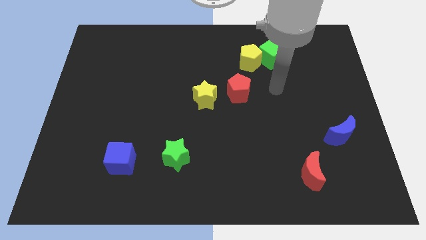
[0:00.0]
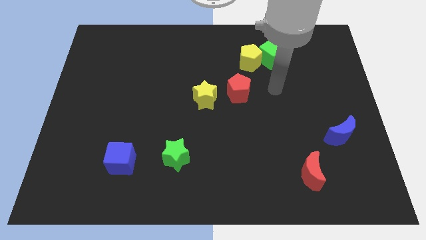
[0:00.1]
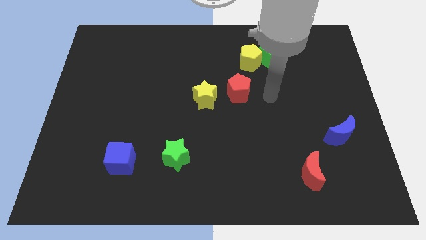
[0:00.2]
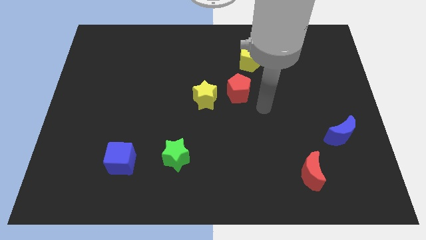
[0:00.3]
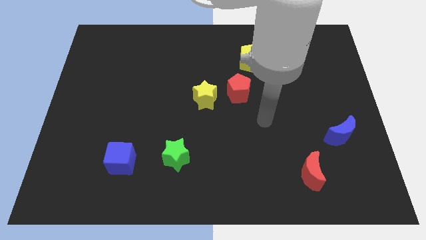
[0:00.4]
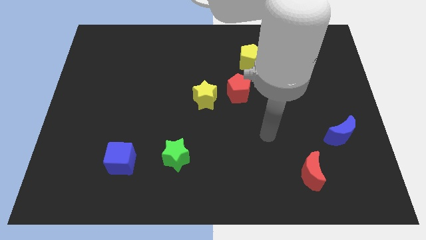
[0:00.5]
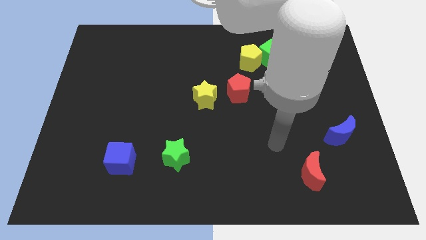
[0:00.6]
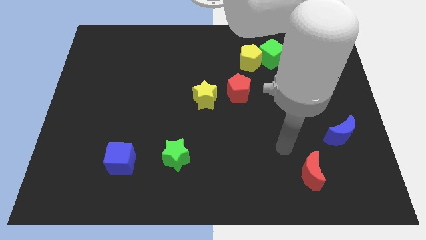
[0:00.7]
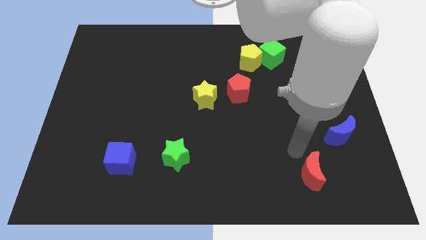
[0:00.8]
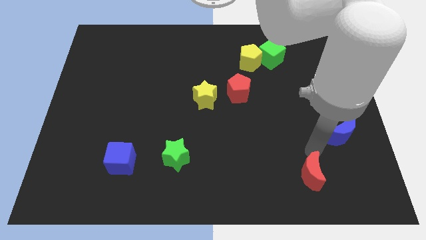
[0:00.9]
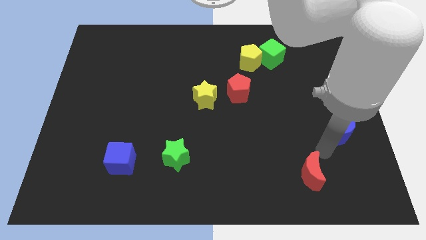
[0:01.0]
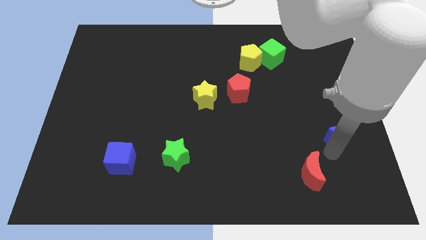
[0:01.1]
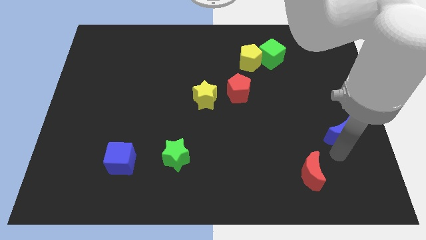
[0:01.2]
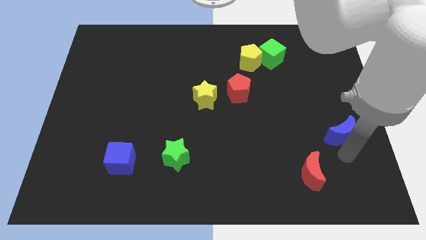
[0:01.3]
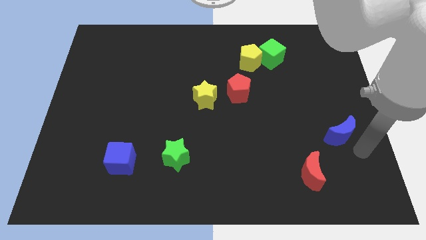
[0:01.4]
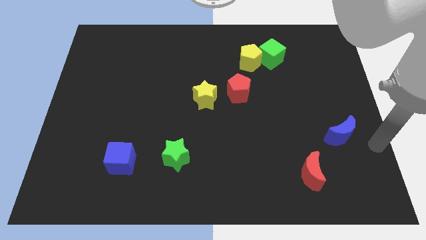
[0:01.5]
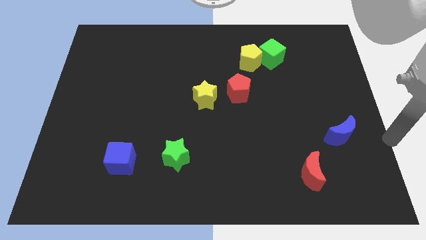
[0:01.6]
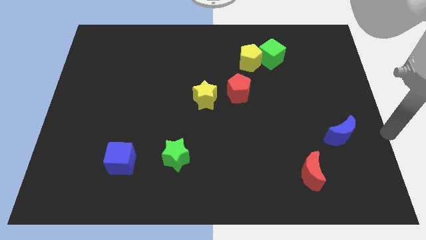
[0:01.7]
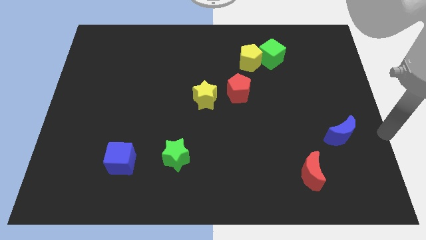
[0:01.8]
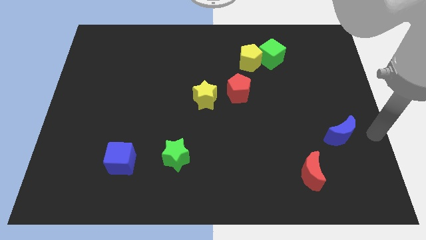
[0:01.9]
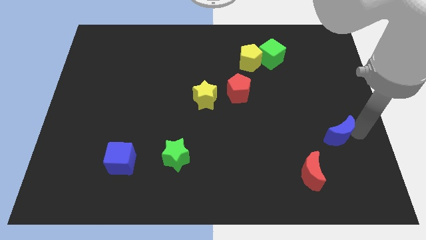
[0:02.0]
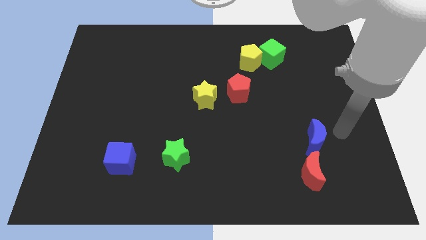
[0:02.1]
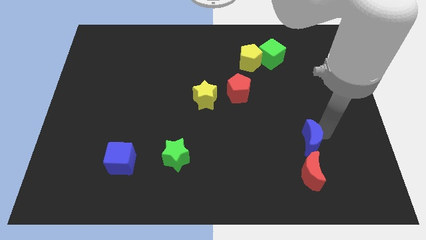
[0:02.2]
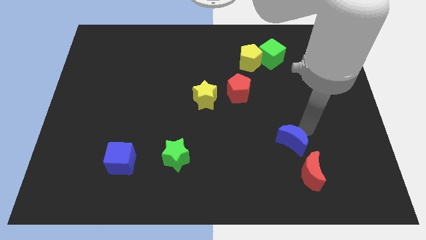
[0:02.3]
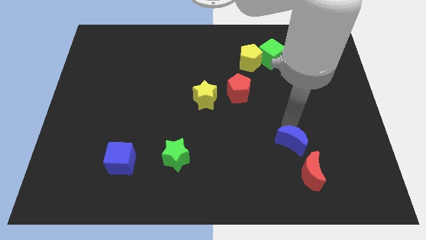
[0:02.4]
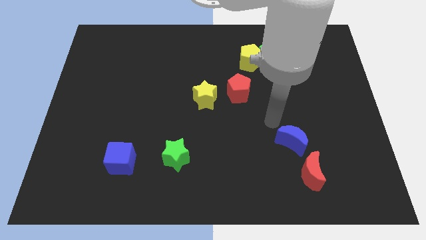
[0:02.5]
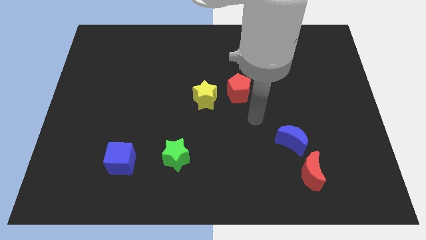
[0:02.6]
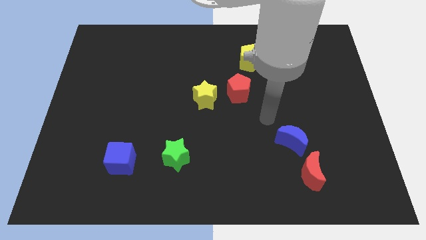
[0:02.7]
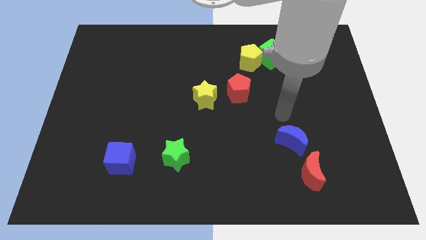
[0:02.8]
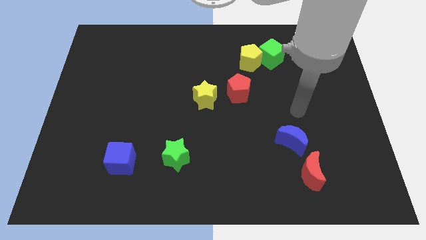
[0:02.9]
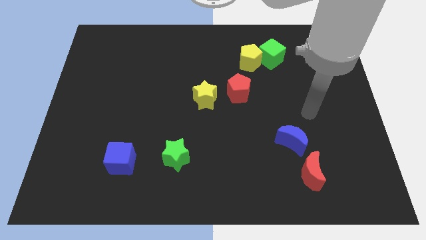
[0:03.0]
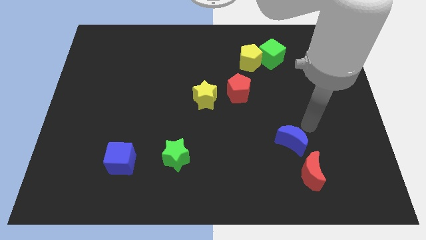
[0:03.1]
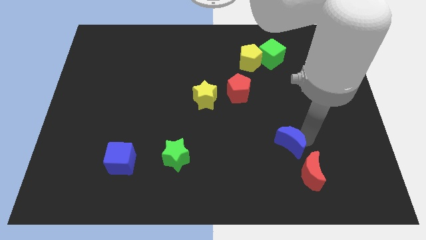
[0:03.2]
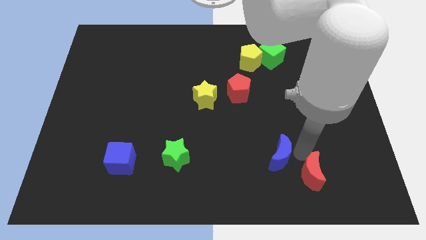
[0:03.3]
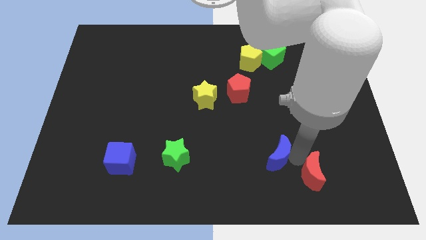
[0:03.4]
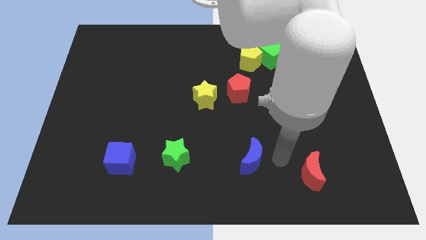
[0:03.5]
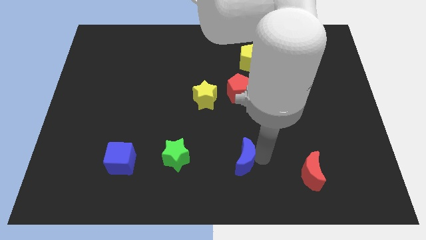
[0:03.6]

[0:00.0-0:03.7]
push blue crescent below red pentagon

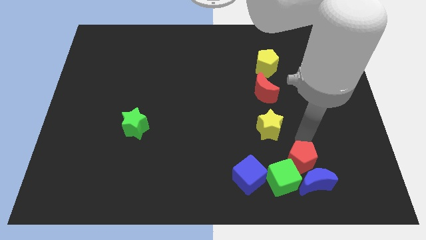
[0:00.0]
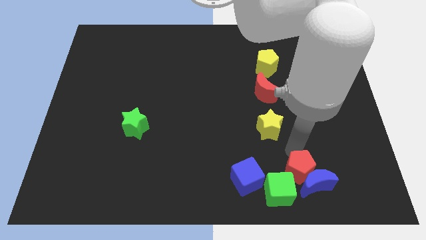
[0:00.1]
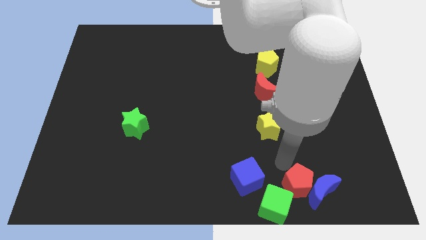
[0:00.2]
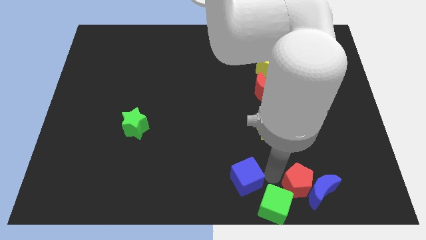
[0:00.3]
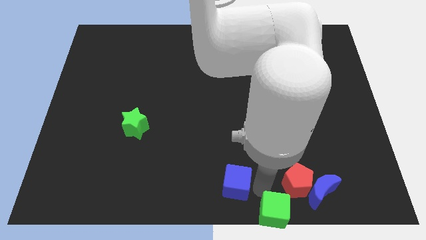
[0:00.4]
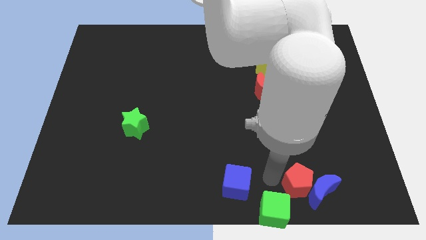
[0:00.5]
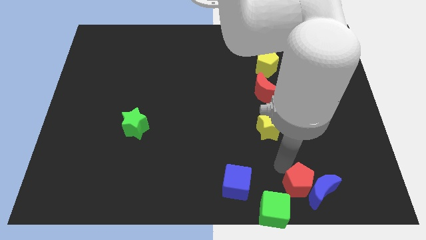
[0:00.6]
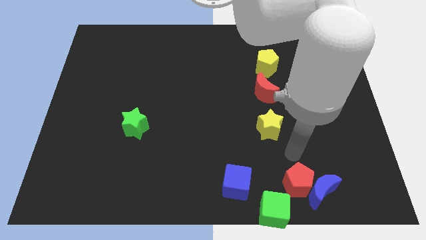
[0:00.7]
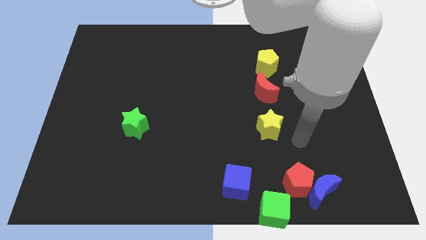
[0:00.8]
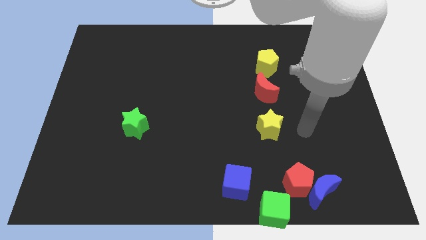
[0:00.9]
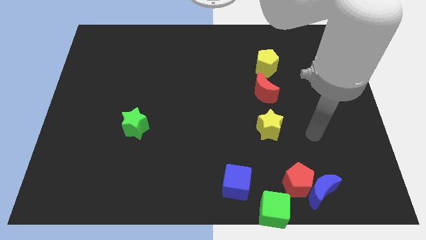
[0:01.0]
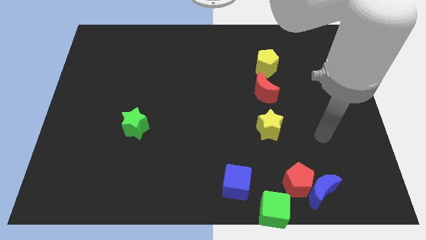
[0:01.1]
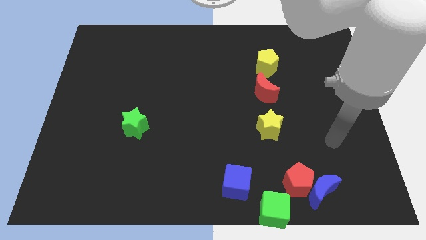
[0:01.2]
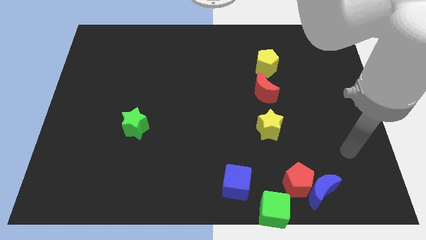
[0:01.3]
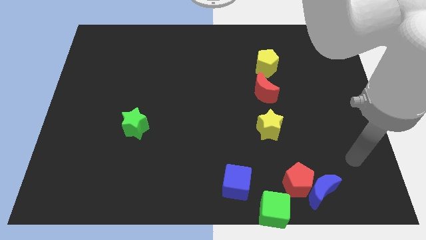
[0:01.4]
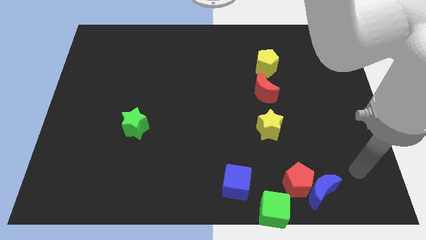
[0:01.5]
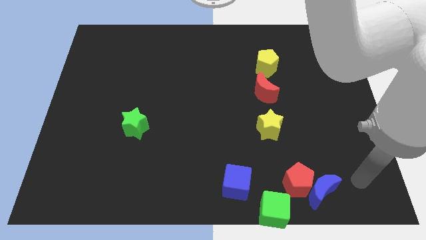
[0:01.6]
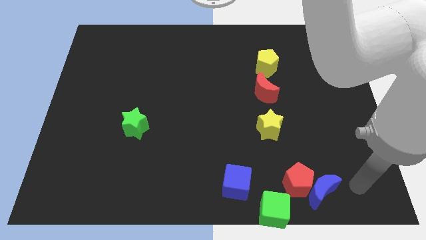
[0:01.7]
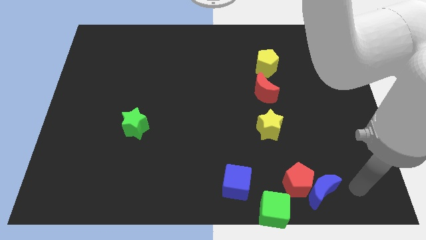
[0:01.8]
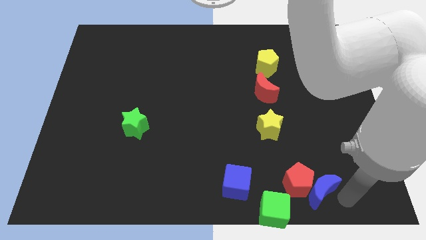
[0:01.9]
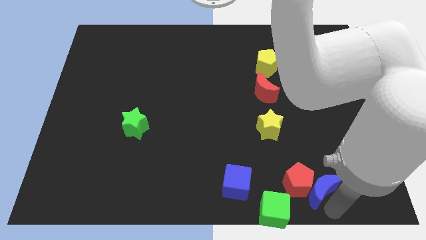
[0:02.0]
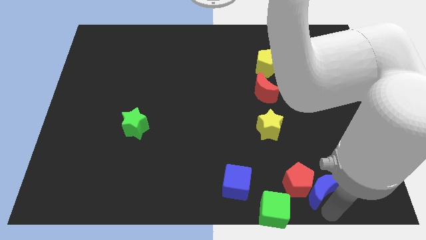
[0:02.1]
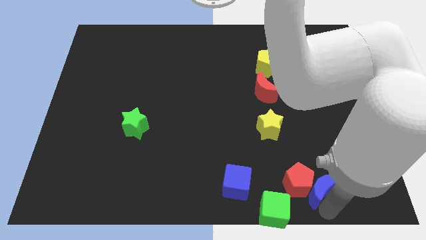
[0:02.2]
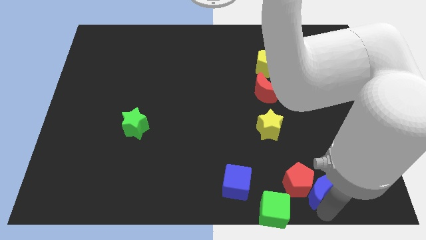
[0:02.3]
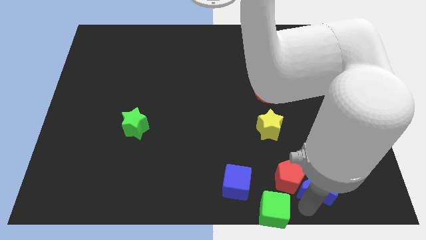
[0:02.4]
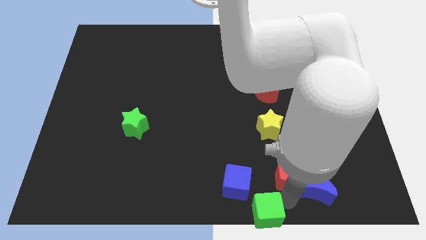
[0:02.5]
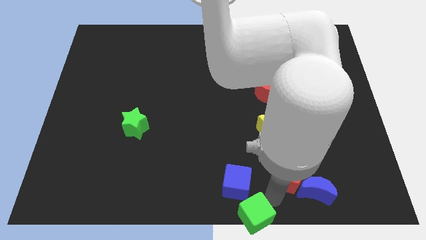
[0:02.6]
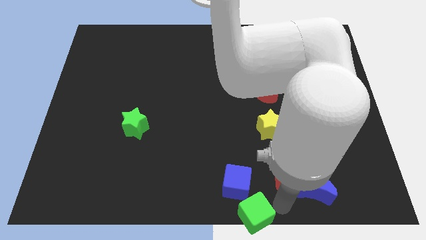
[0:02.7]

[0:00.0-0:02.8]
push a group of blocks downward

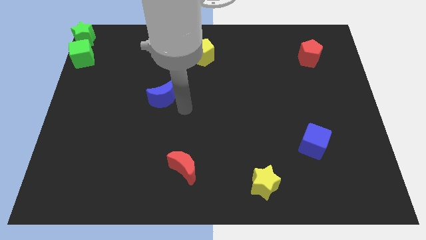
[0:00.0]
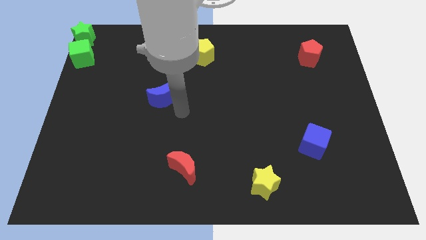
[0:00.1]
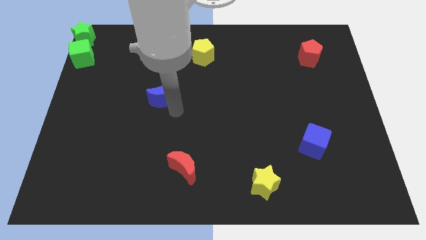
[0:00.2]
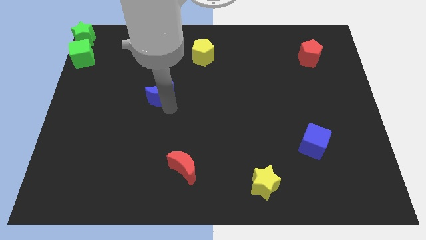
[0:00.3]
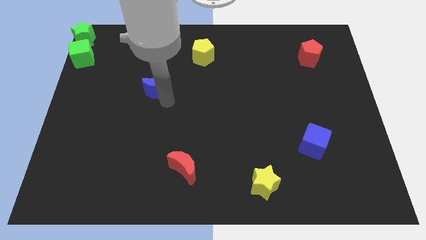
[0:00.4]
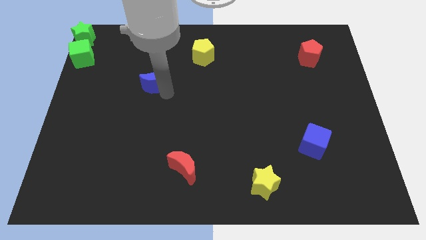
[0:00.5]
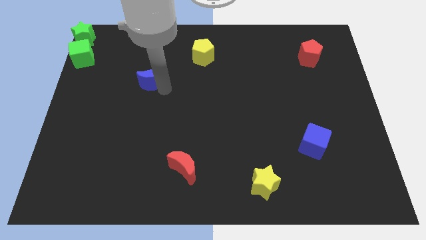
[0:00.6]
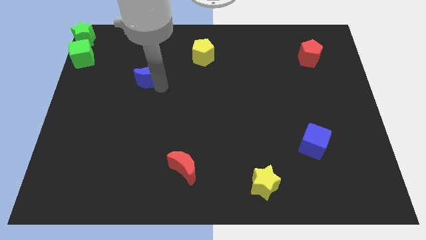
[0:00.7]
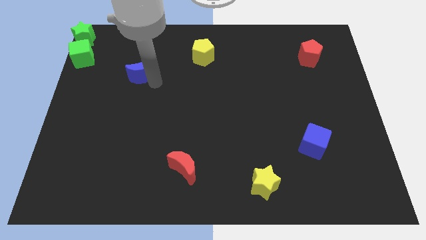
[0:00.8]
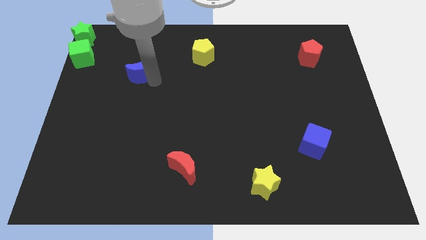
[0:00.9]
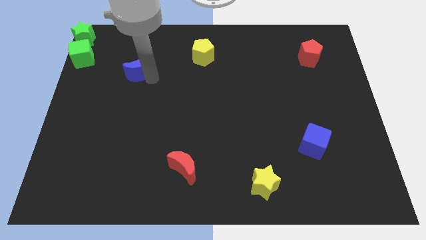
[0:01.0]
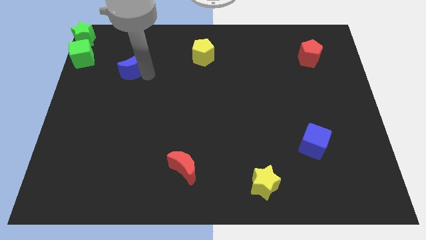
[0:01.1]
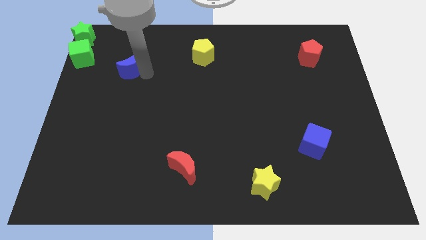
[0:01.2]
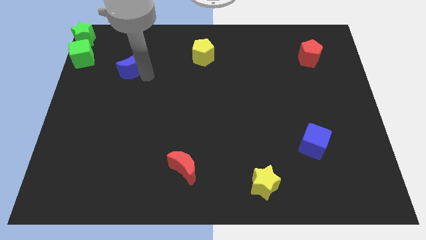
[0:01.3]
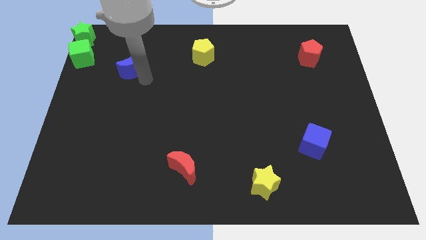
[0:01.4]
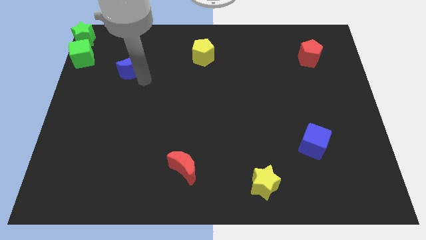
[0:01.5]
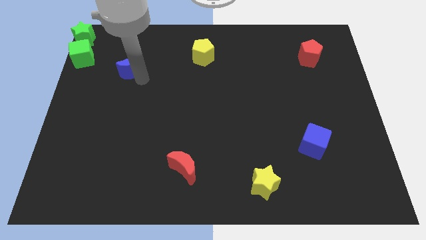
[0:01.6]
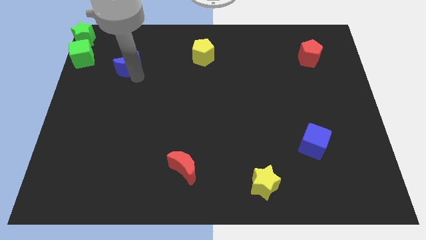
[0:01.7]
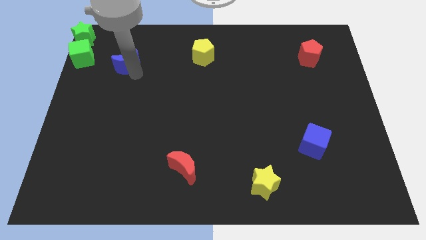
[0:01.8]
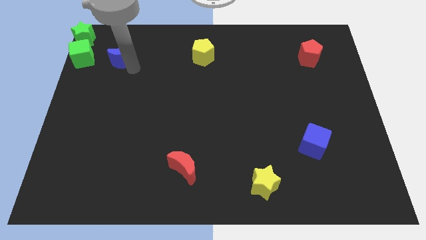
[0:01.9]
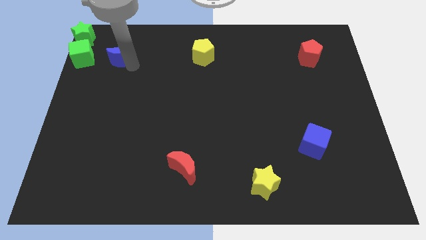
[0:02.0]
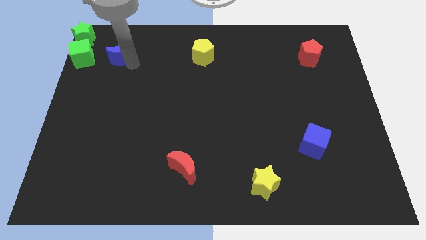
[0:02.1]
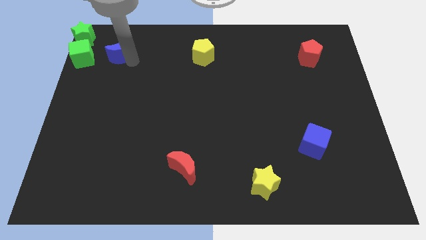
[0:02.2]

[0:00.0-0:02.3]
place the blue moon in between the yellow pentagon and green cube

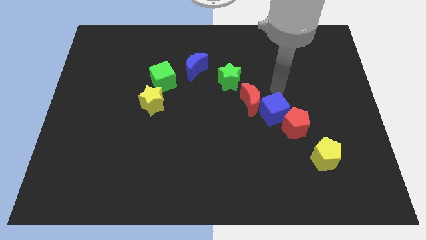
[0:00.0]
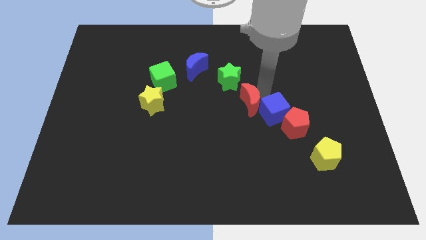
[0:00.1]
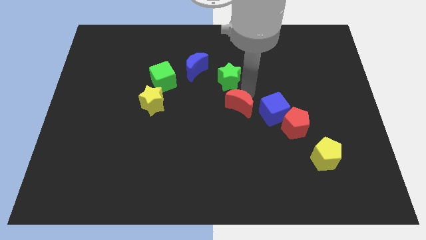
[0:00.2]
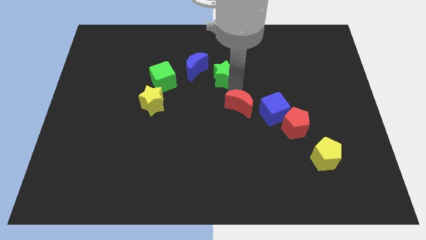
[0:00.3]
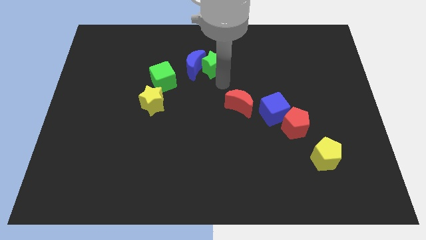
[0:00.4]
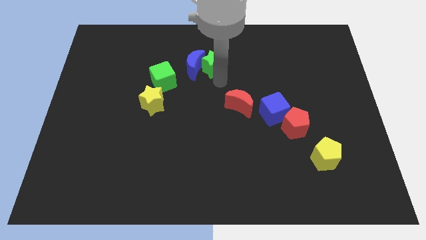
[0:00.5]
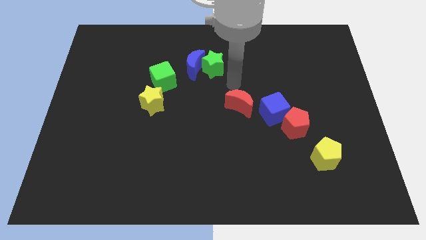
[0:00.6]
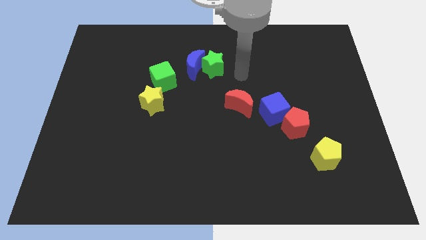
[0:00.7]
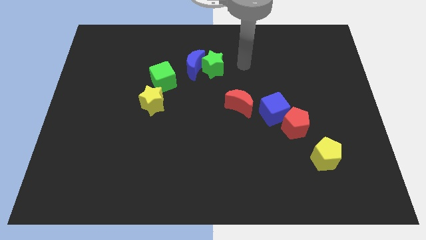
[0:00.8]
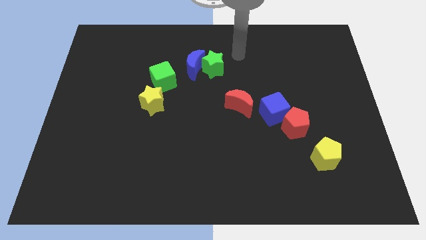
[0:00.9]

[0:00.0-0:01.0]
push the green star into blue crescent
